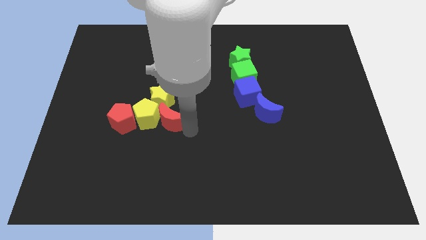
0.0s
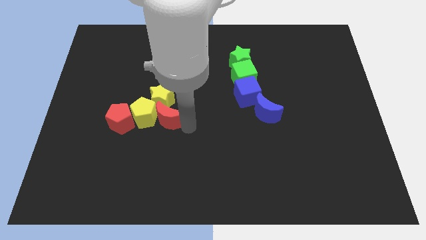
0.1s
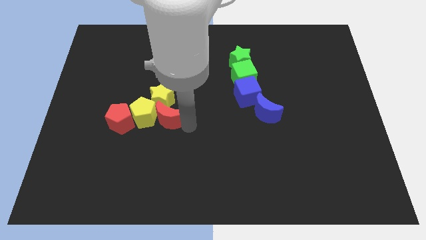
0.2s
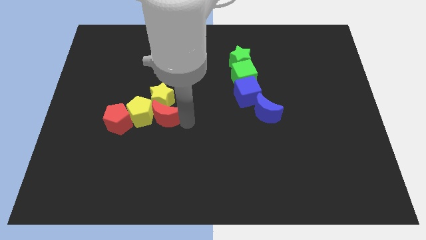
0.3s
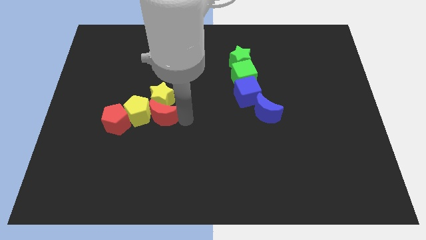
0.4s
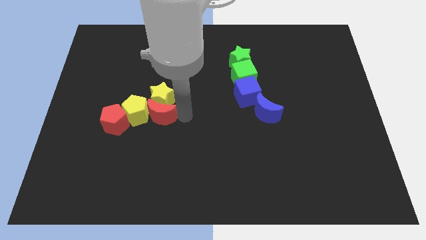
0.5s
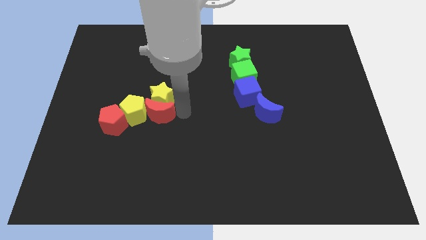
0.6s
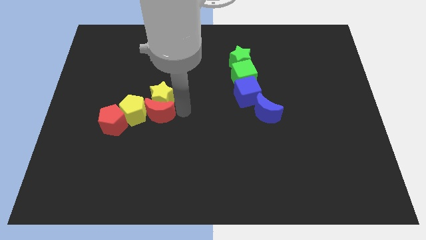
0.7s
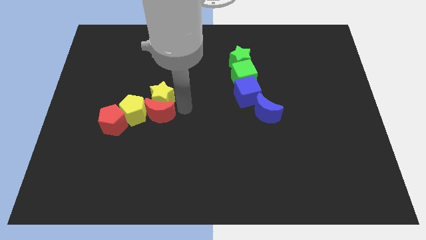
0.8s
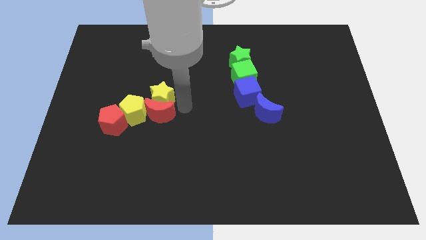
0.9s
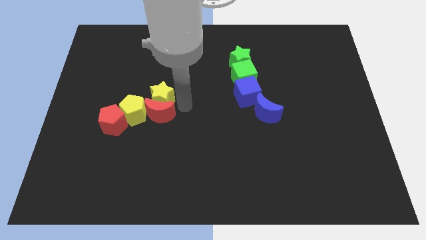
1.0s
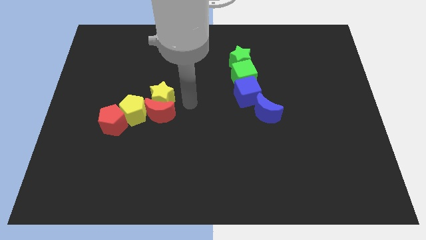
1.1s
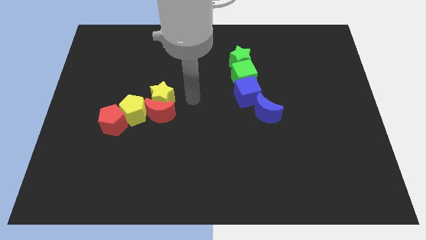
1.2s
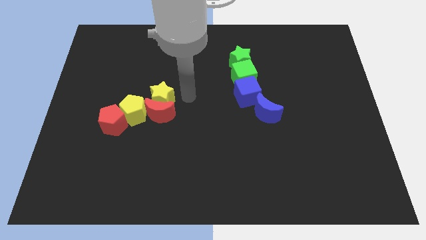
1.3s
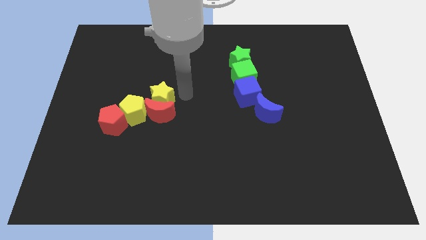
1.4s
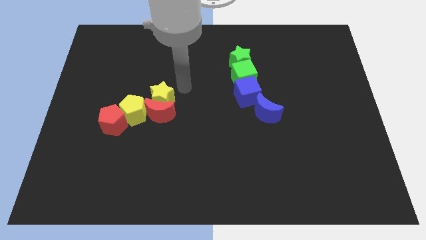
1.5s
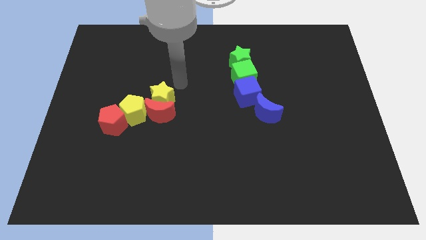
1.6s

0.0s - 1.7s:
place your arm right to the yellow star

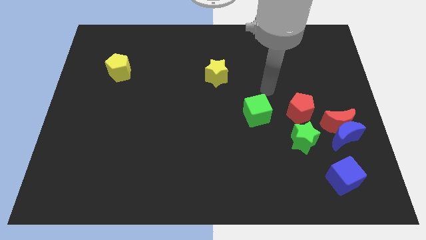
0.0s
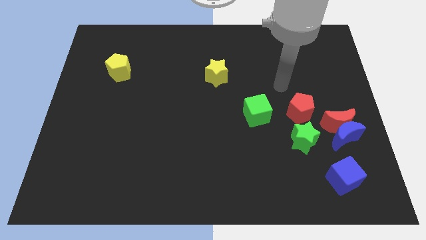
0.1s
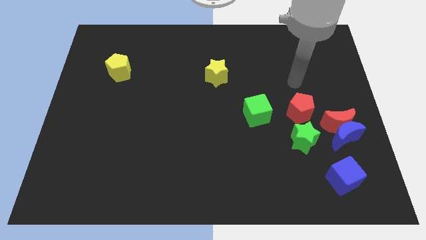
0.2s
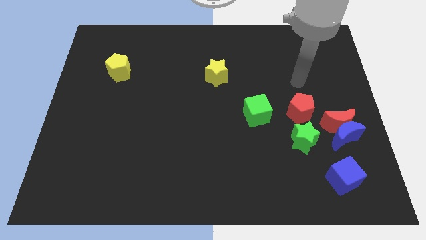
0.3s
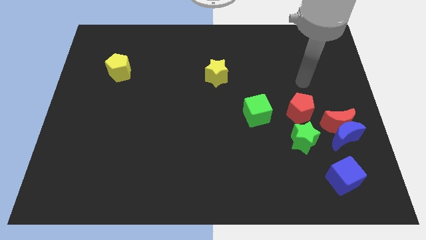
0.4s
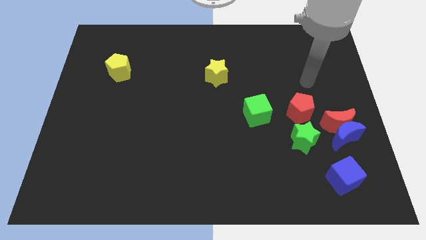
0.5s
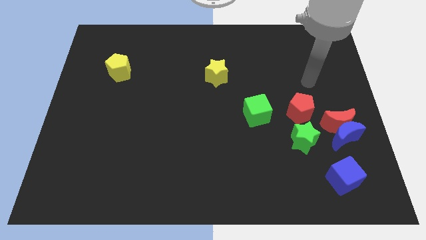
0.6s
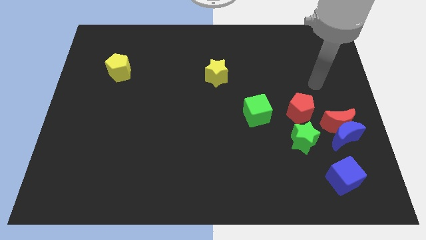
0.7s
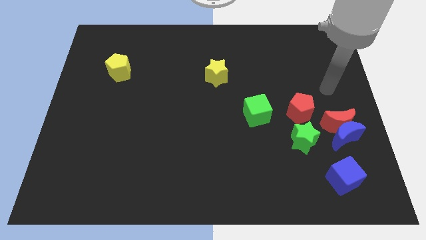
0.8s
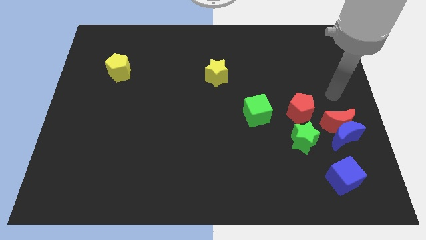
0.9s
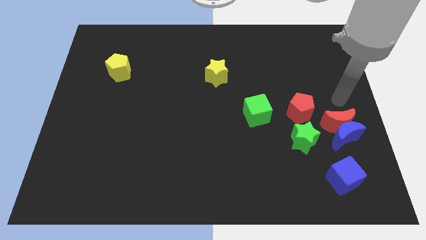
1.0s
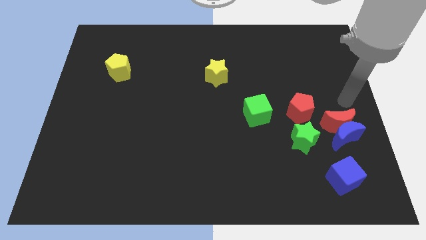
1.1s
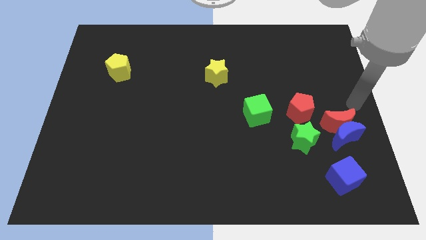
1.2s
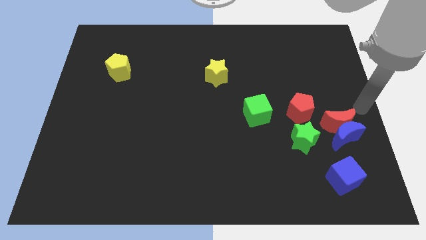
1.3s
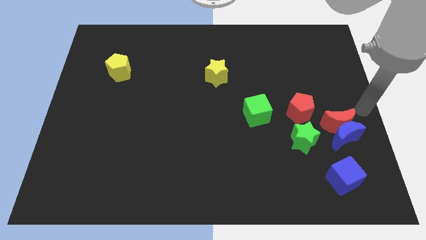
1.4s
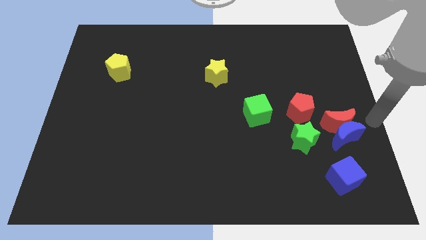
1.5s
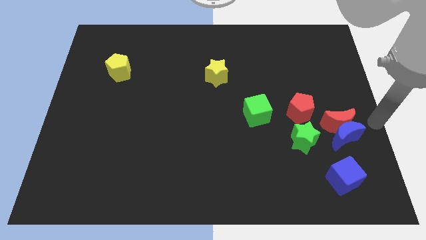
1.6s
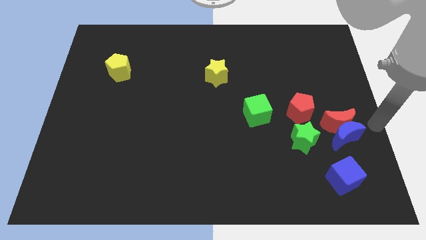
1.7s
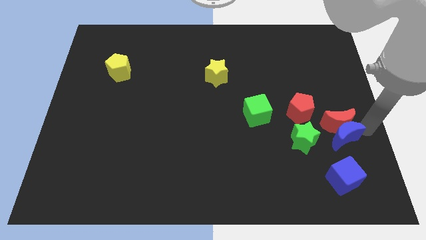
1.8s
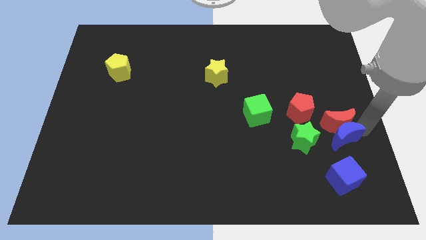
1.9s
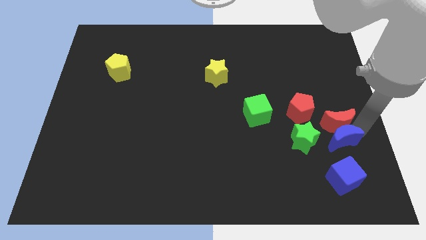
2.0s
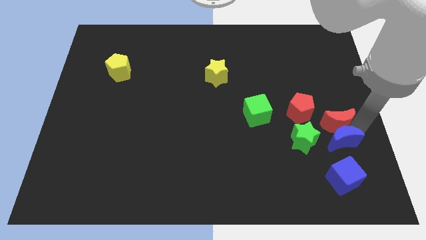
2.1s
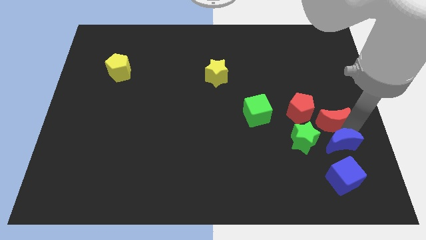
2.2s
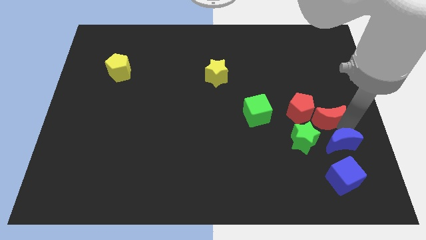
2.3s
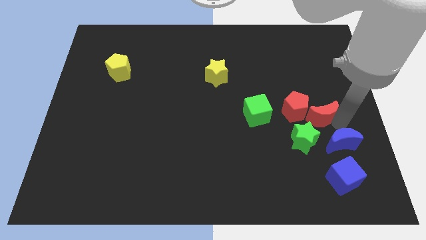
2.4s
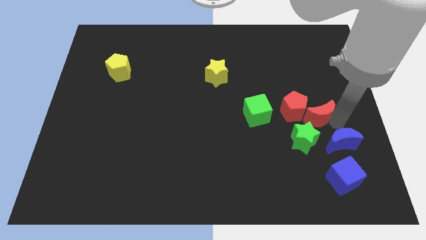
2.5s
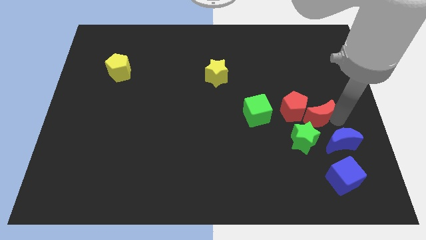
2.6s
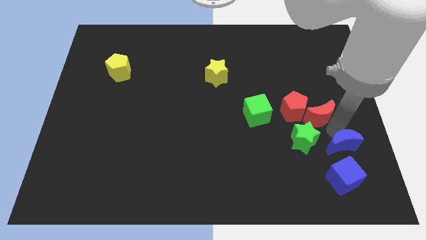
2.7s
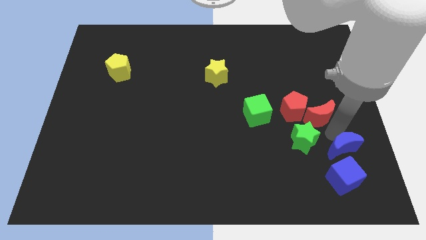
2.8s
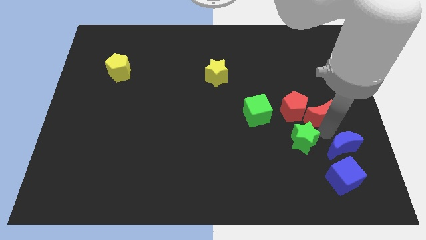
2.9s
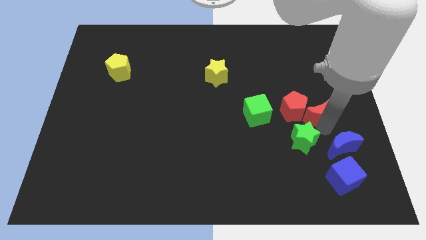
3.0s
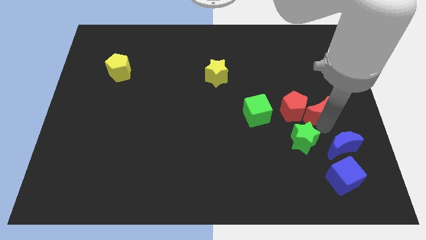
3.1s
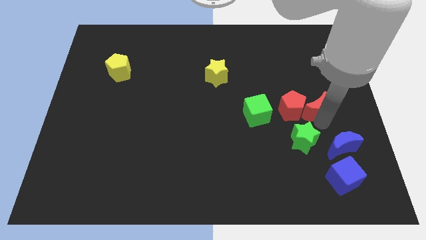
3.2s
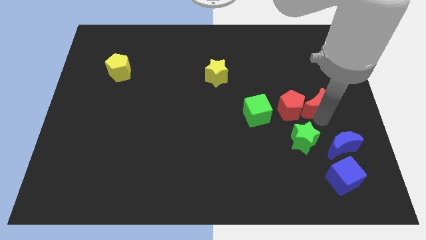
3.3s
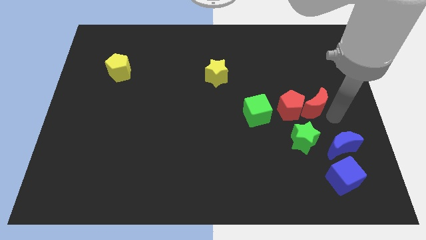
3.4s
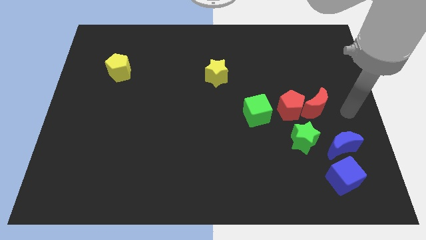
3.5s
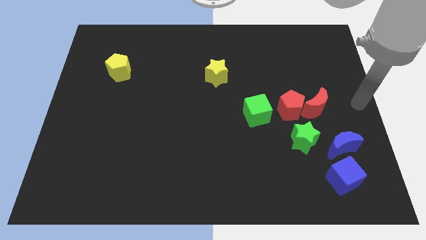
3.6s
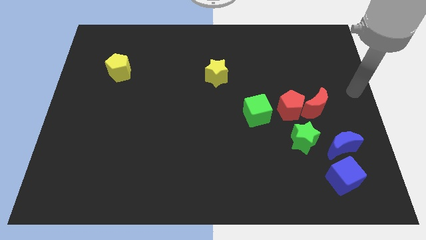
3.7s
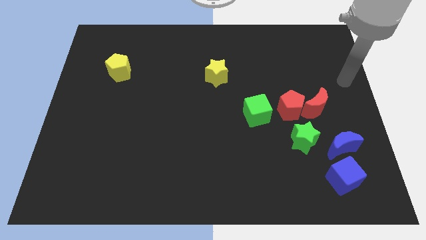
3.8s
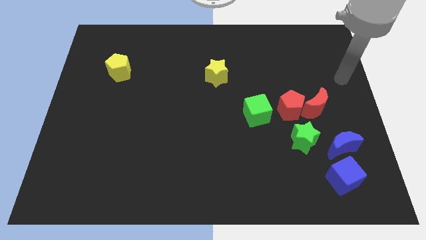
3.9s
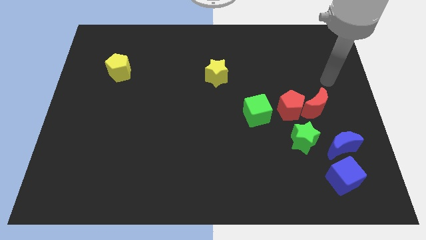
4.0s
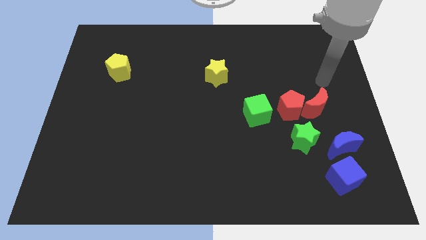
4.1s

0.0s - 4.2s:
place the red moon above the blue moon

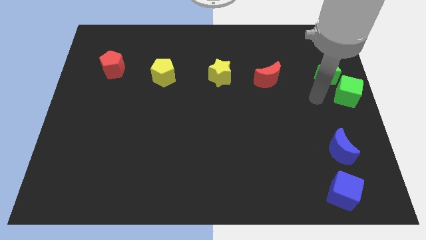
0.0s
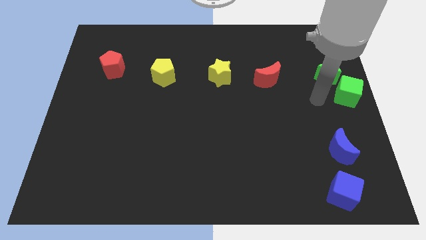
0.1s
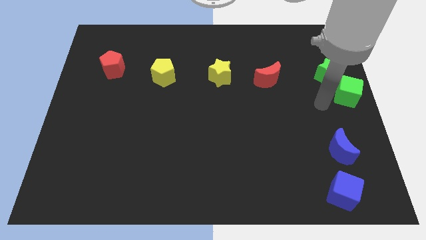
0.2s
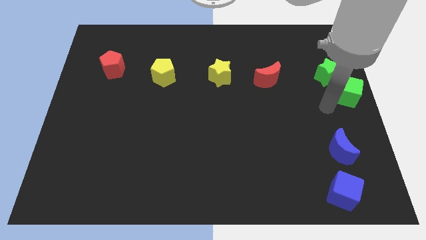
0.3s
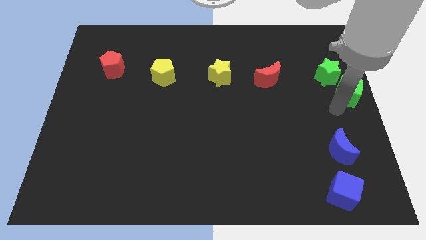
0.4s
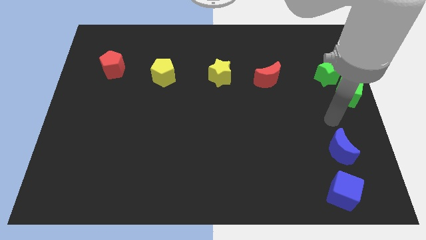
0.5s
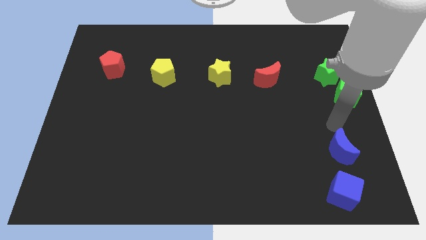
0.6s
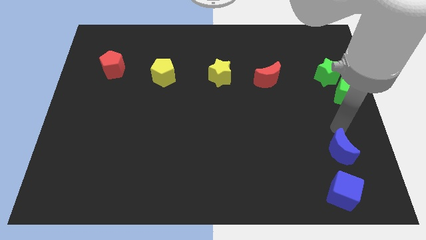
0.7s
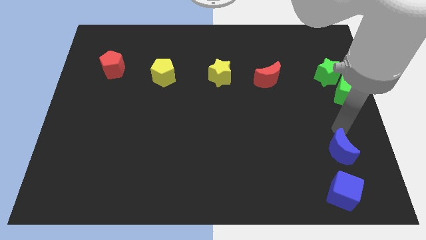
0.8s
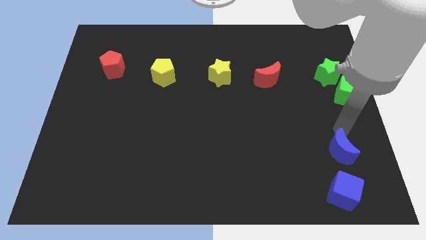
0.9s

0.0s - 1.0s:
point your arm at the top of the blue crescent

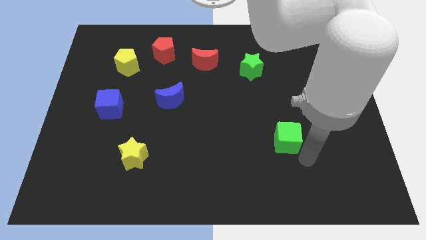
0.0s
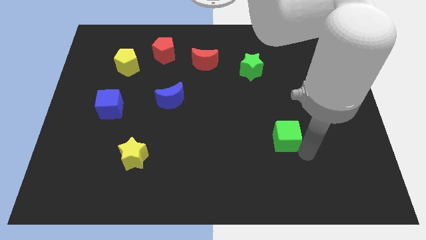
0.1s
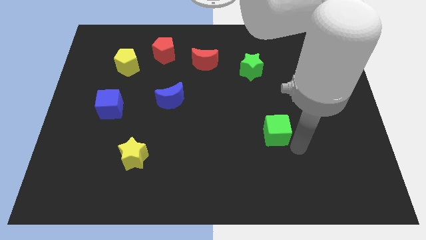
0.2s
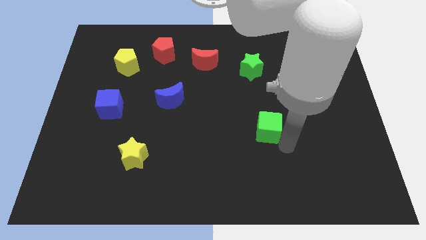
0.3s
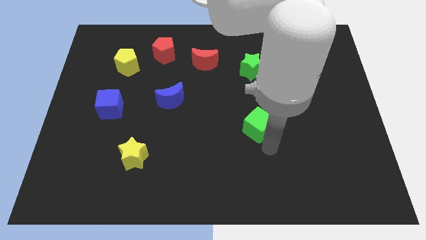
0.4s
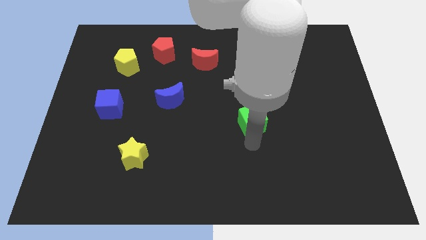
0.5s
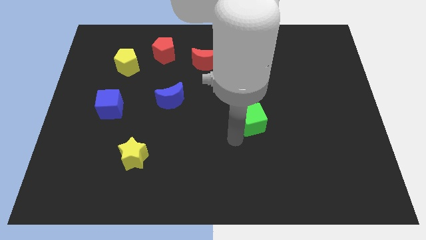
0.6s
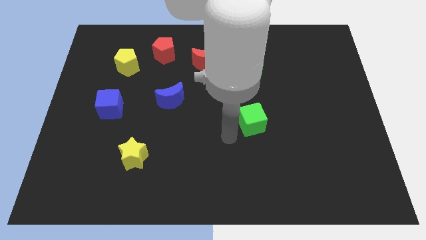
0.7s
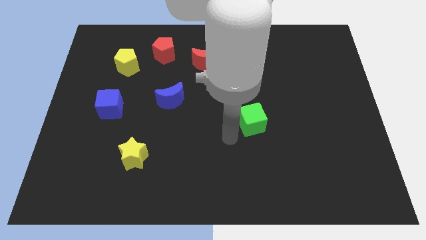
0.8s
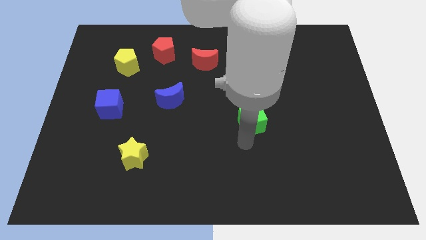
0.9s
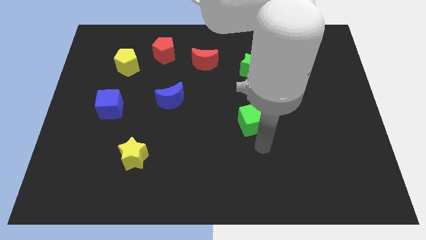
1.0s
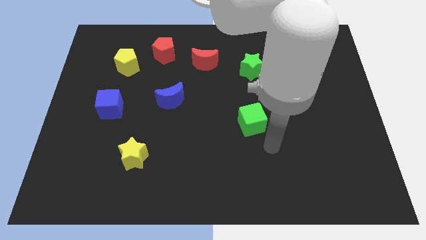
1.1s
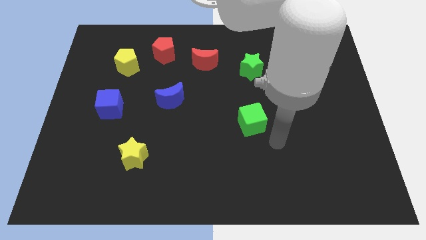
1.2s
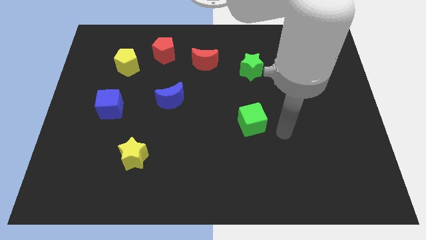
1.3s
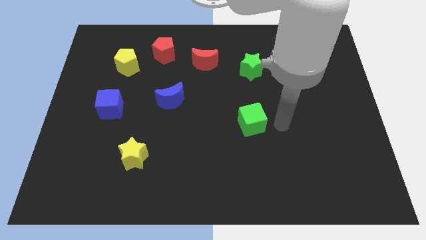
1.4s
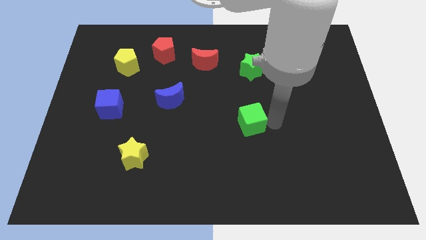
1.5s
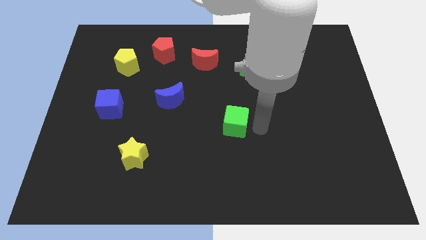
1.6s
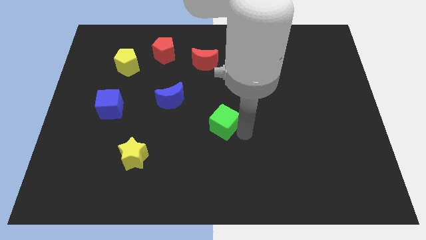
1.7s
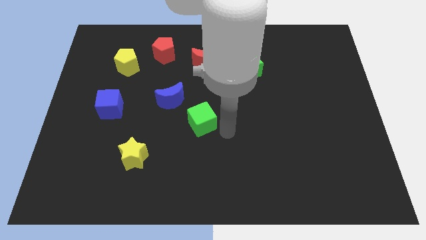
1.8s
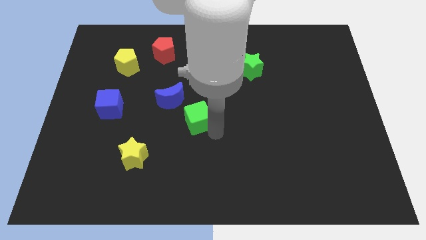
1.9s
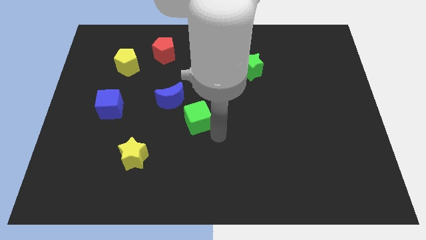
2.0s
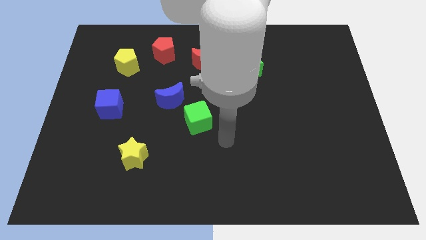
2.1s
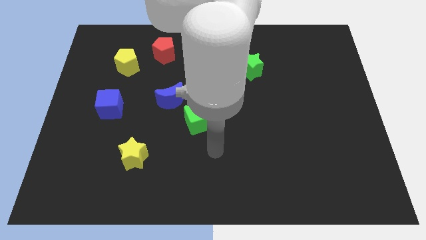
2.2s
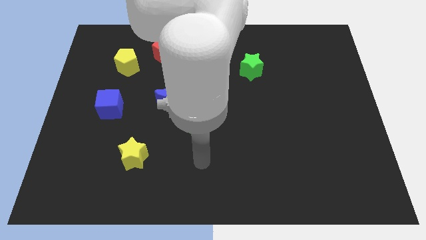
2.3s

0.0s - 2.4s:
move the green cube to the right of the blue crescent
